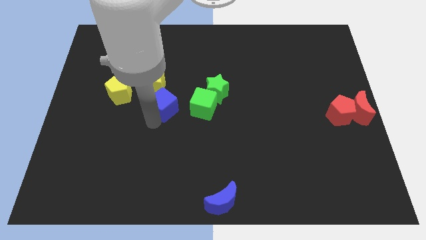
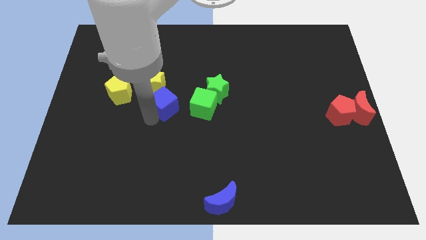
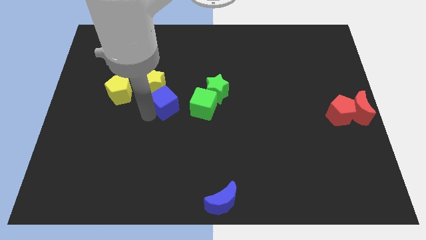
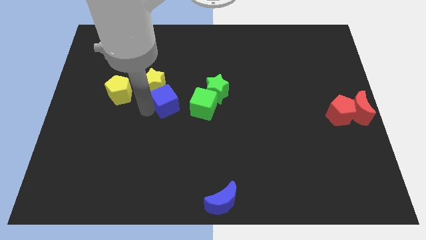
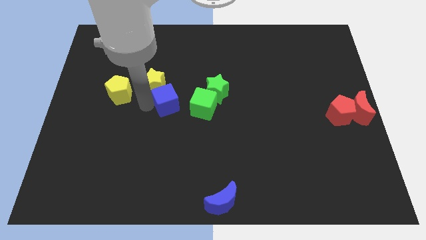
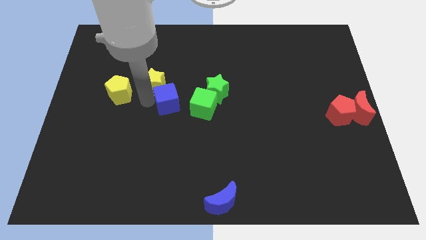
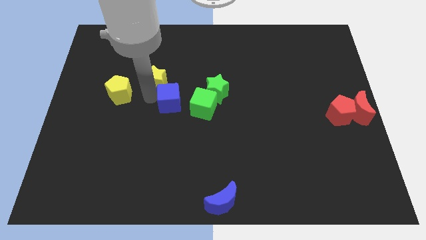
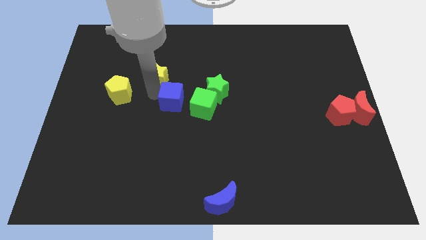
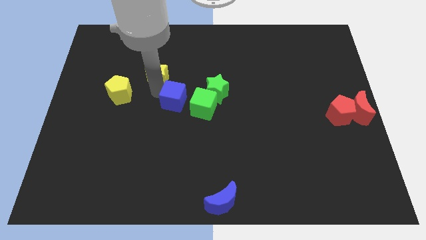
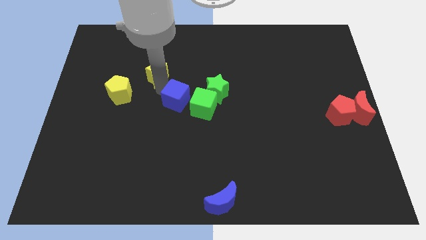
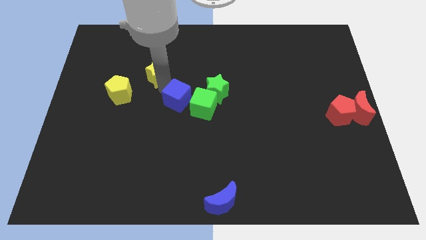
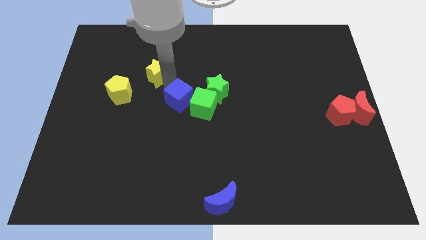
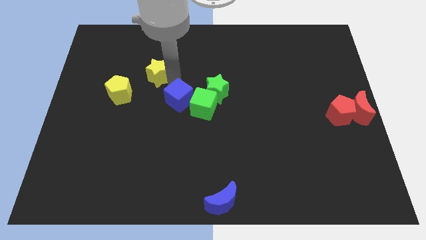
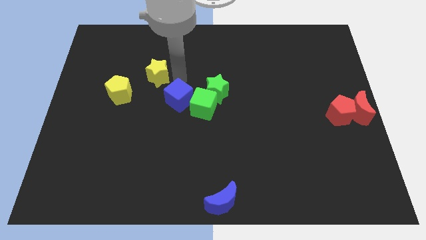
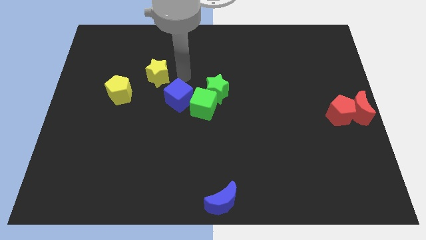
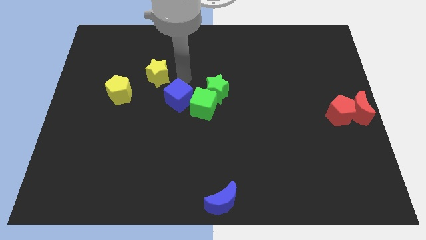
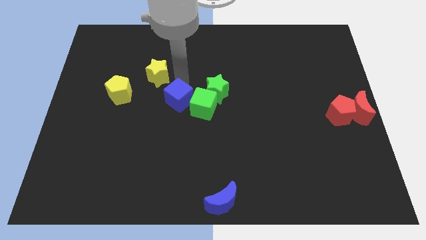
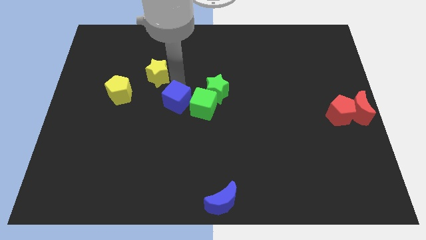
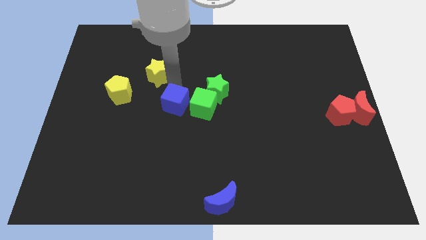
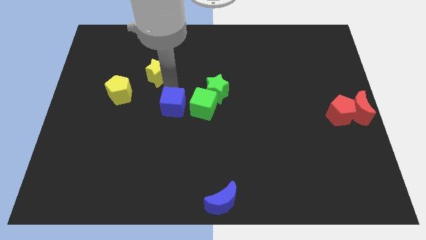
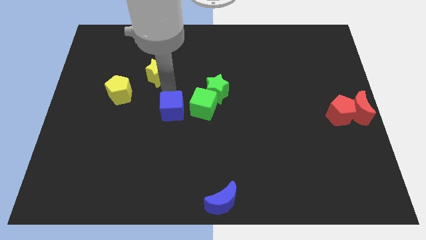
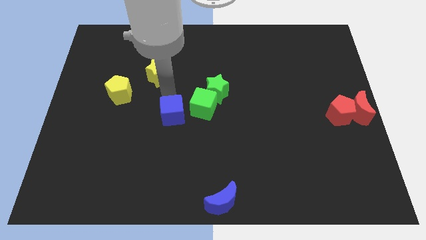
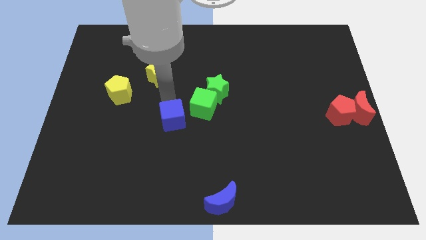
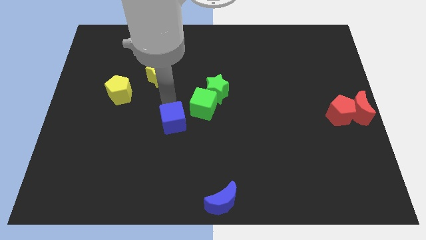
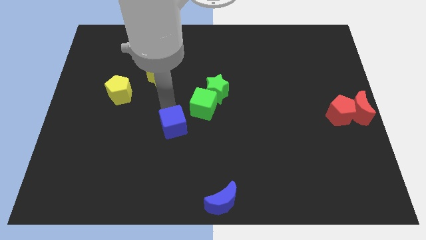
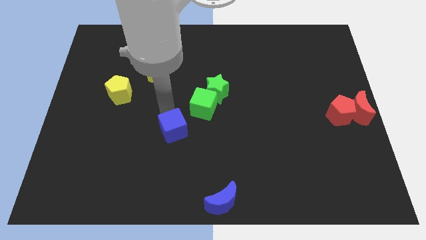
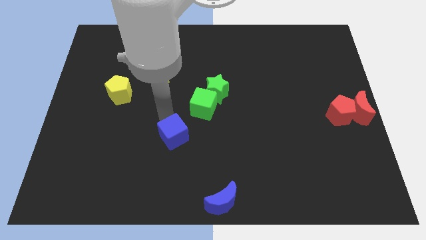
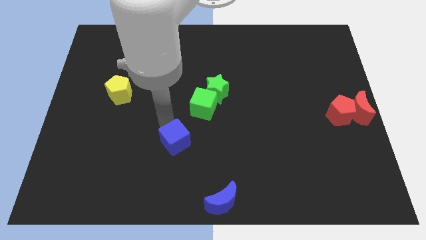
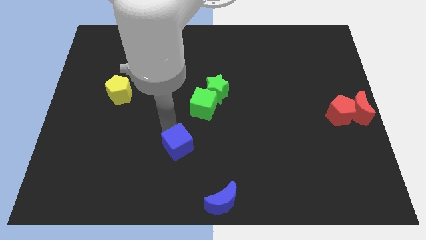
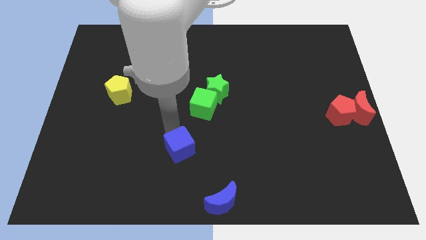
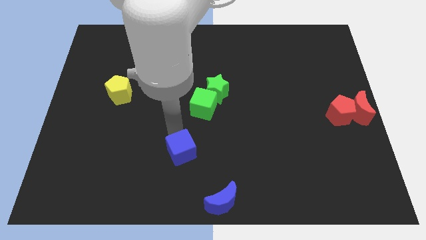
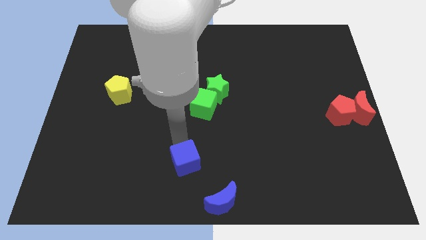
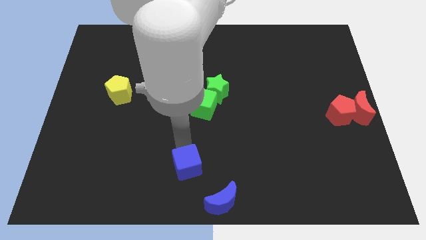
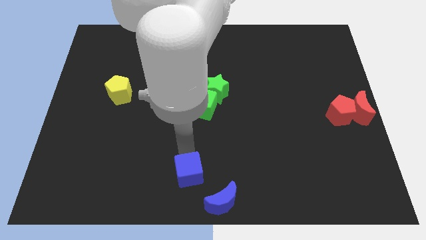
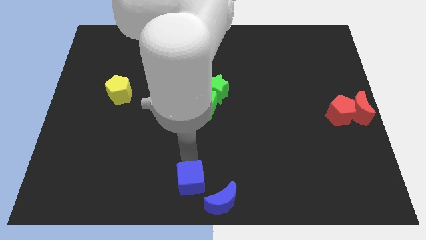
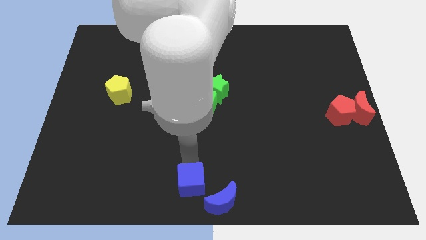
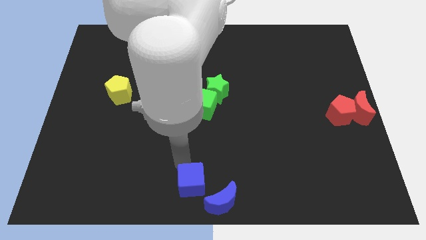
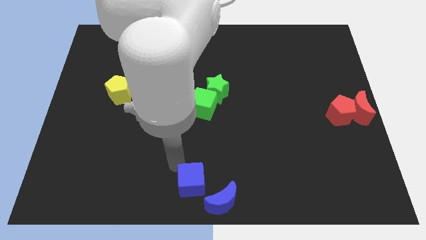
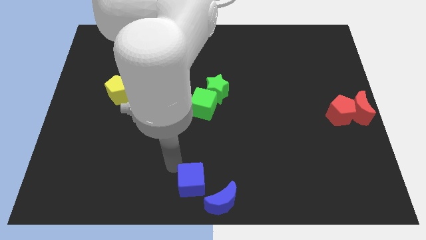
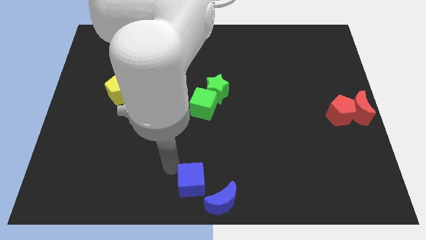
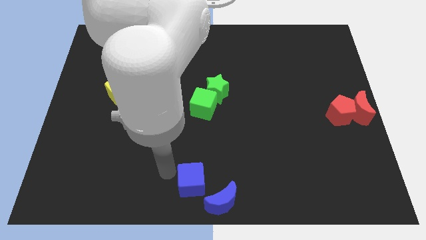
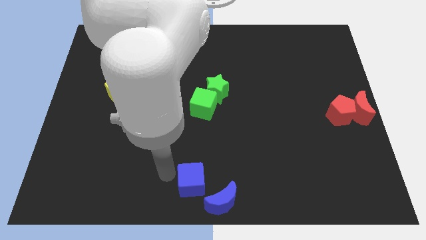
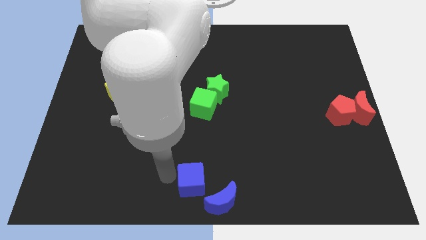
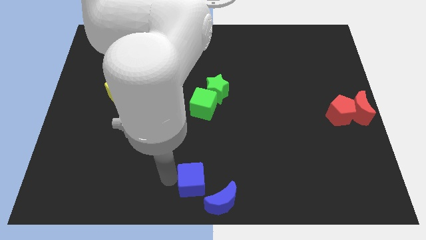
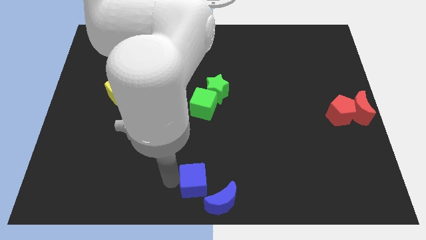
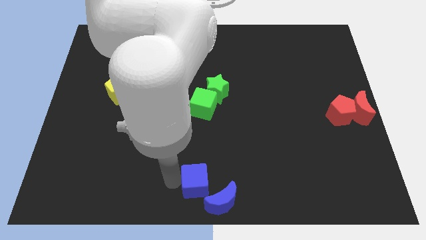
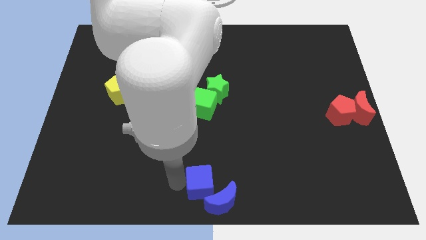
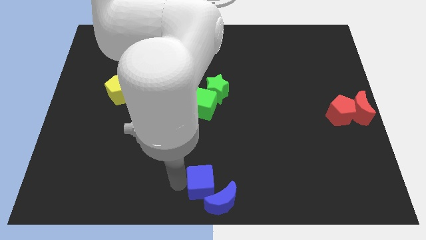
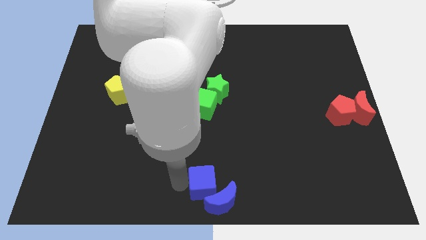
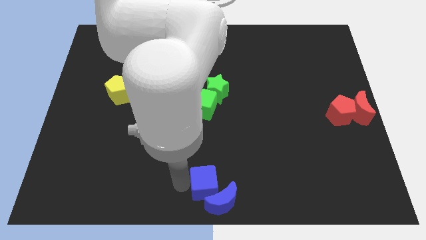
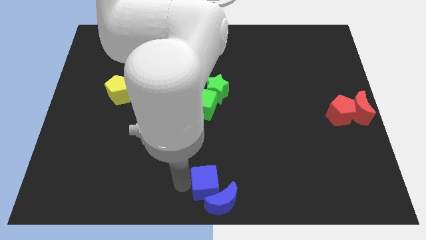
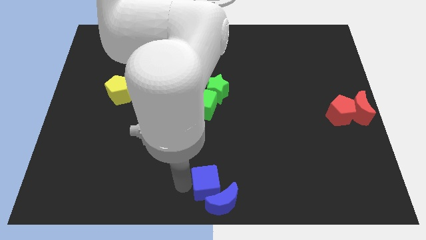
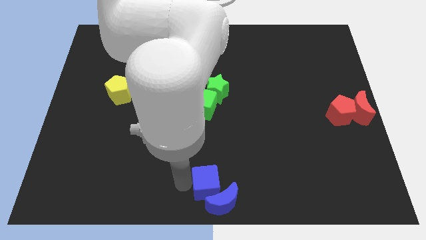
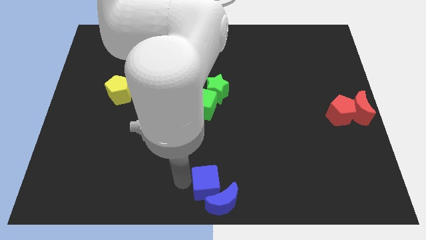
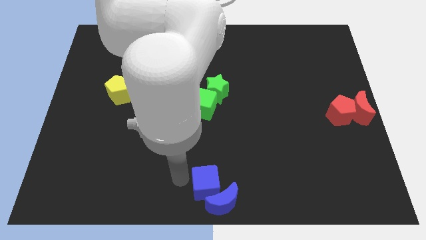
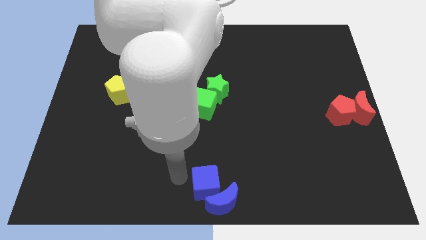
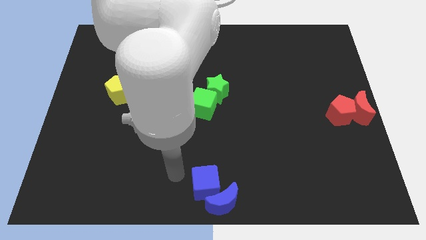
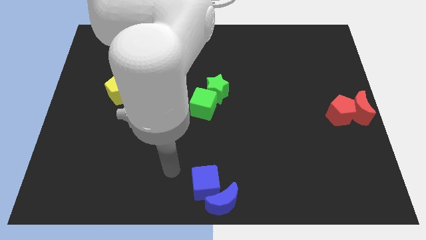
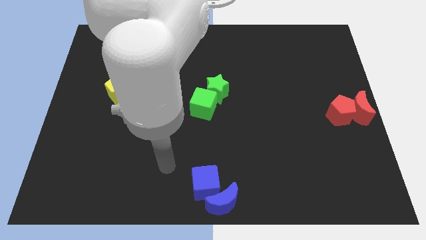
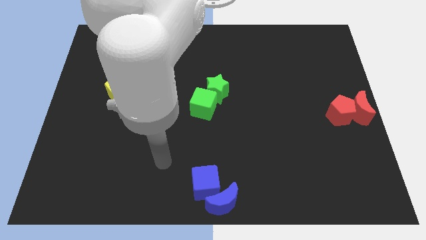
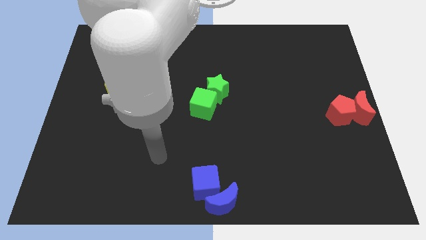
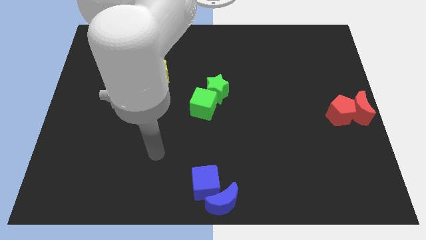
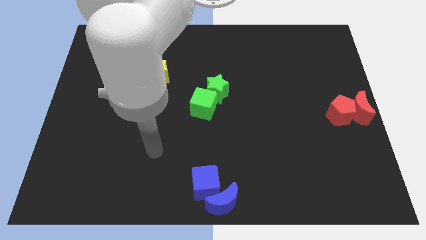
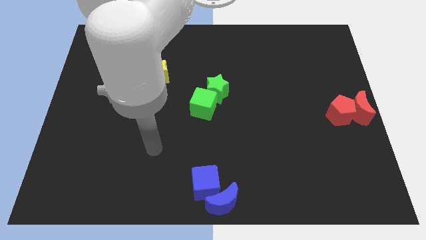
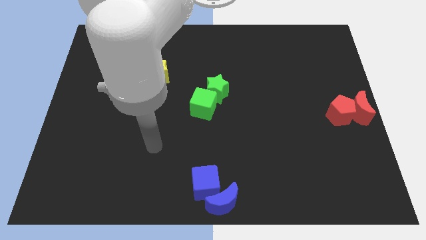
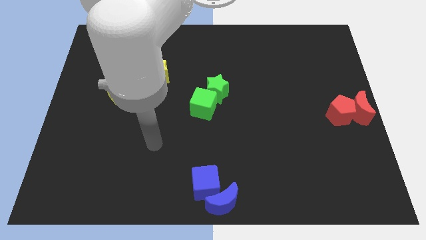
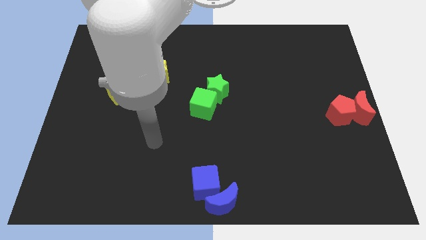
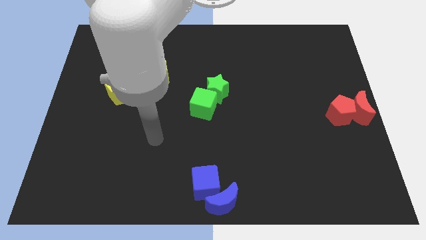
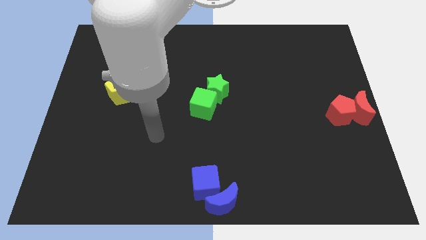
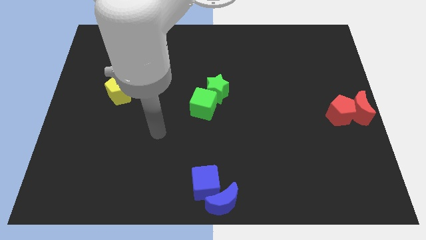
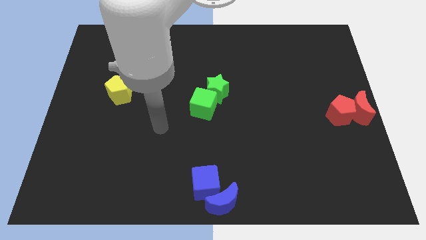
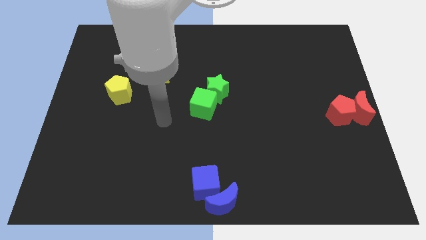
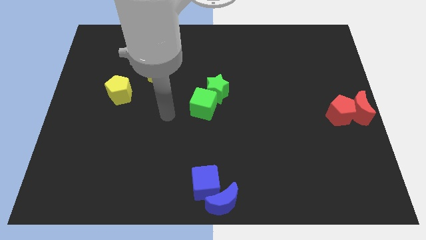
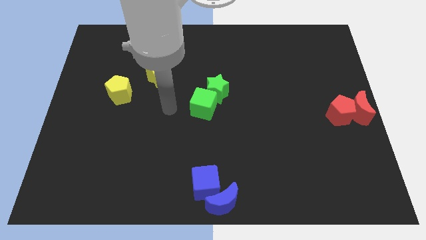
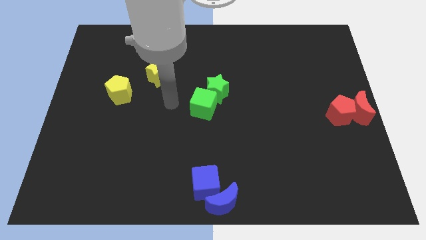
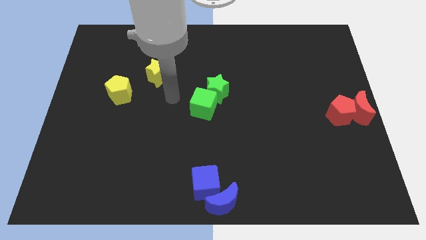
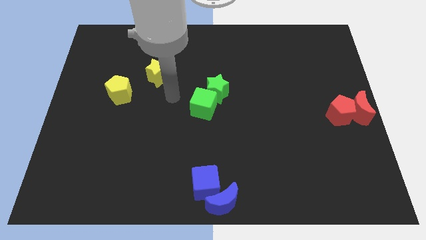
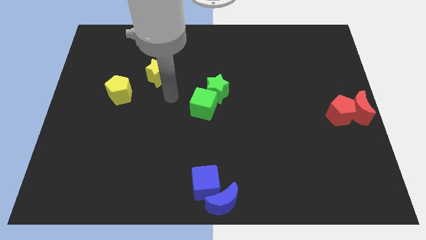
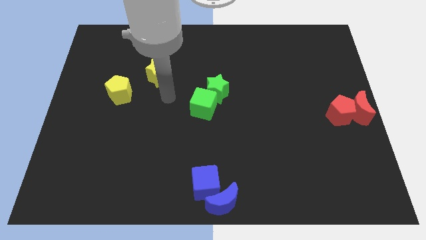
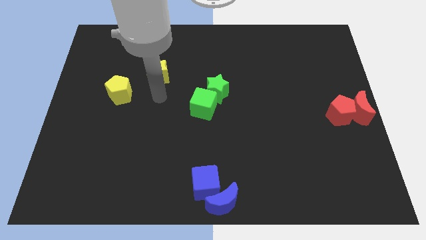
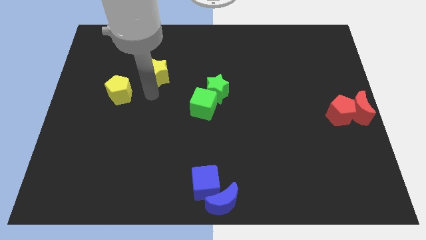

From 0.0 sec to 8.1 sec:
move the blue cube near to the blue crescent

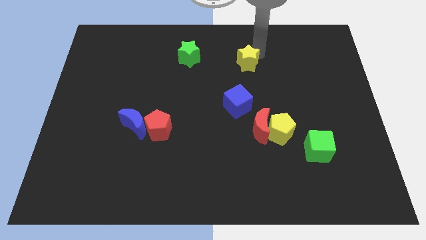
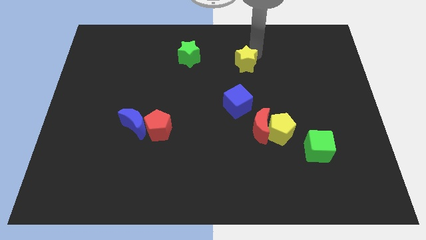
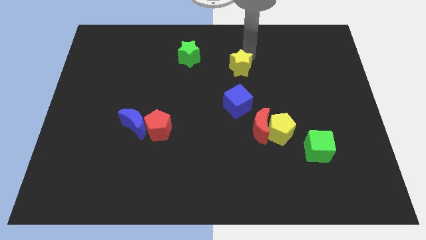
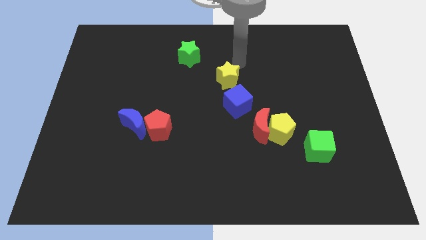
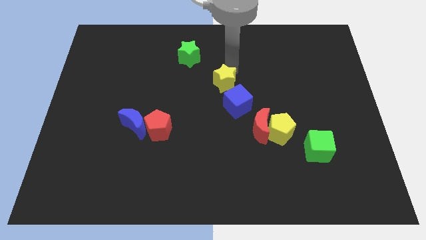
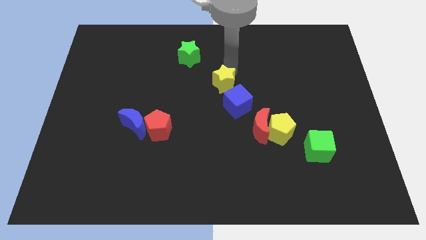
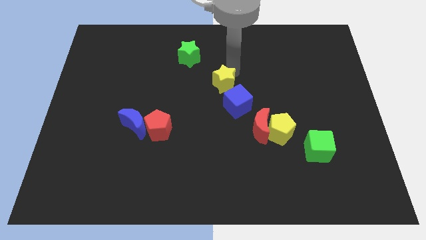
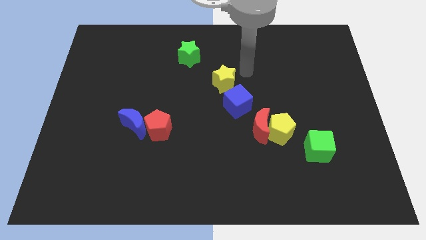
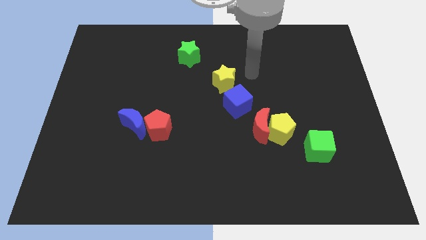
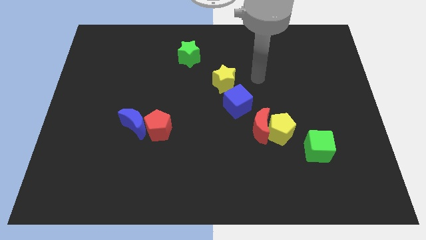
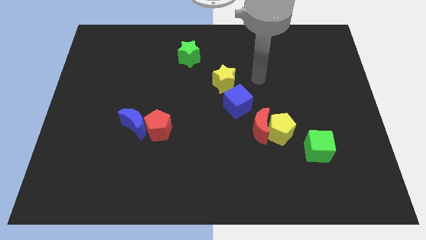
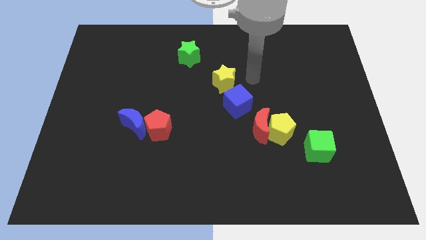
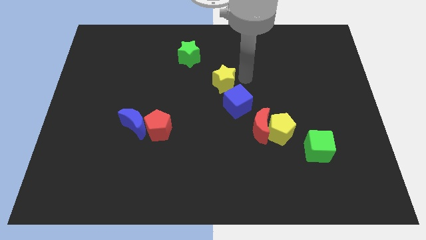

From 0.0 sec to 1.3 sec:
move the yellow star to the top of the blue cube
